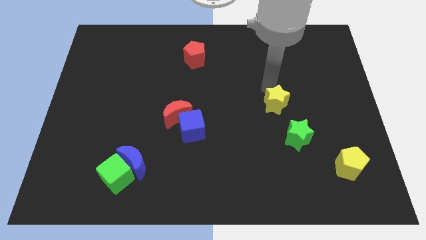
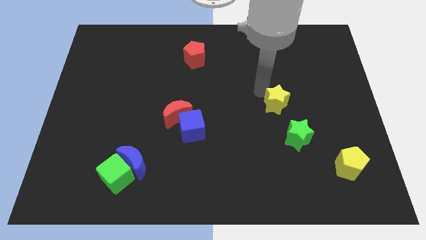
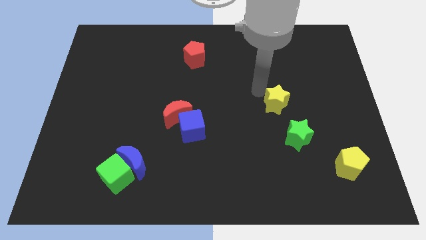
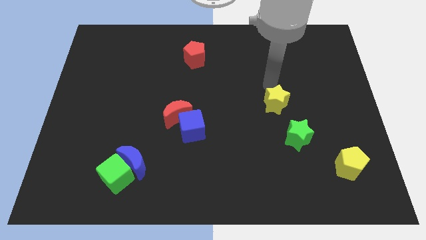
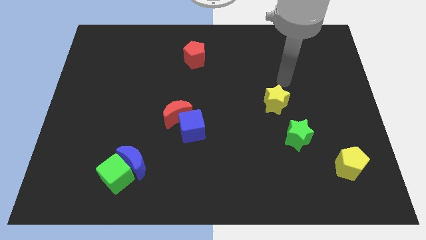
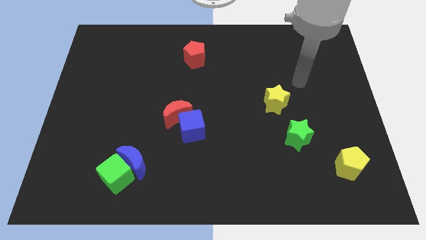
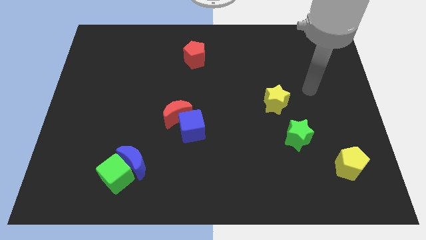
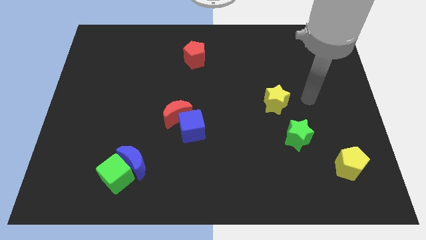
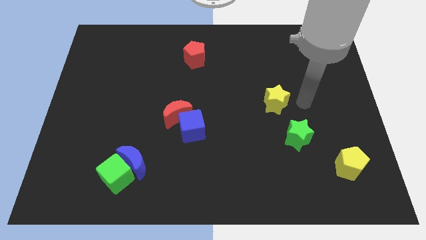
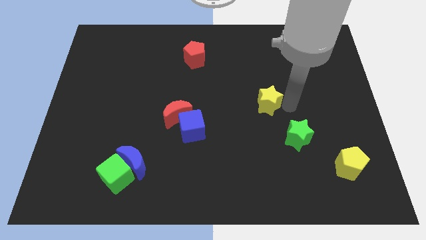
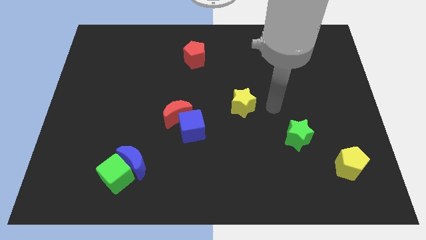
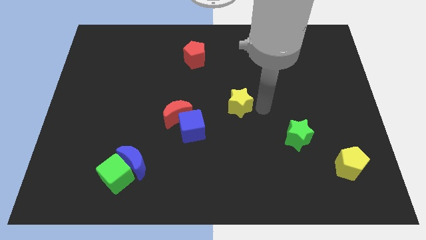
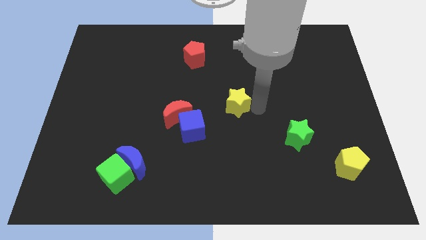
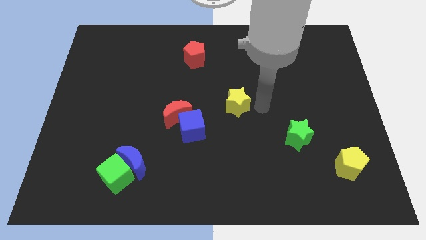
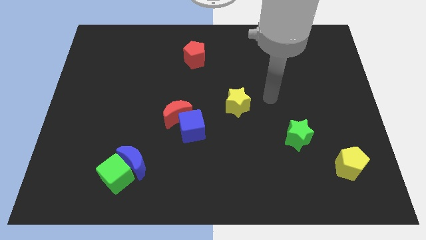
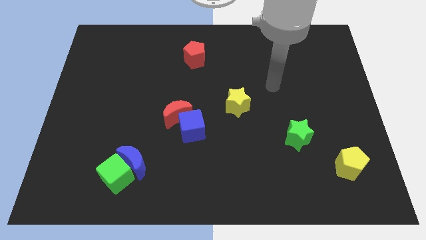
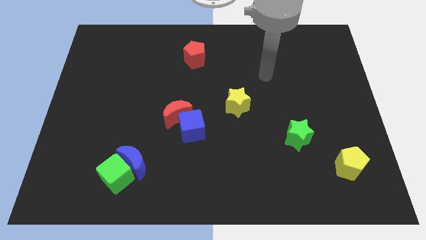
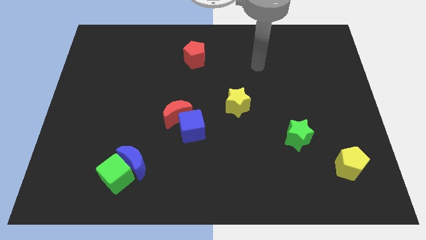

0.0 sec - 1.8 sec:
move the yellow moon slightly to the center of the board

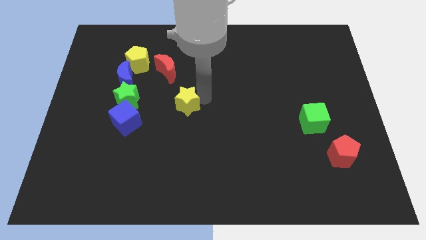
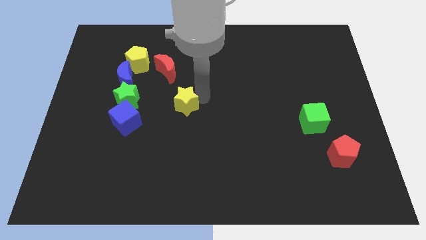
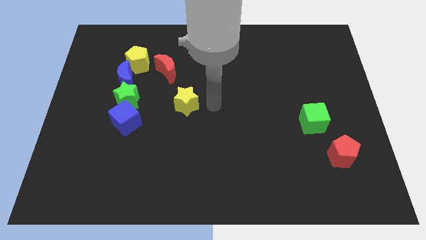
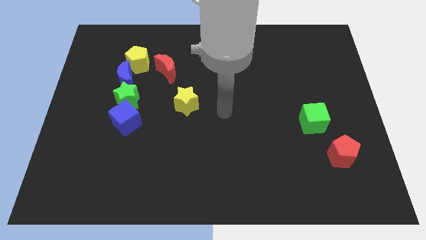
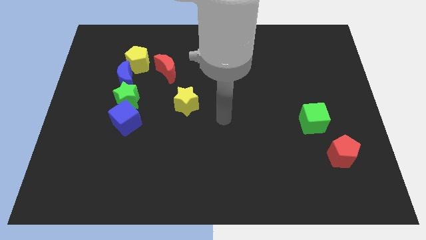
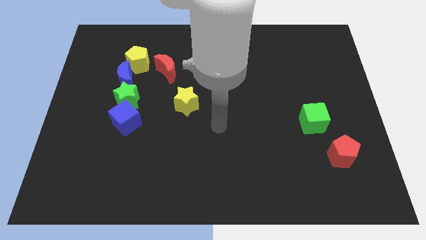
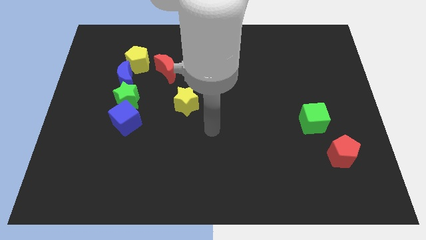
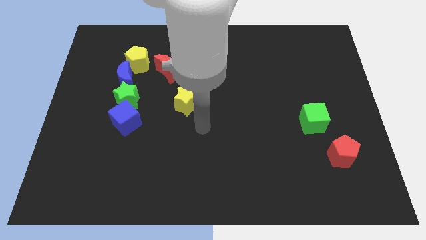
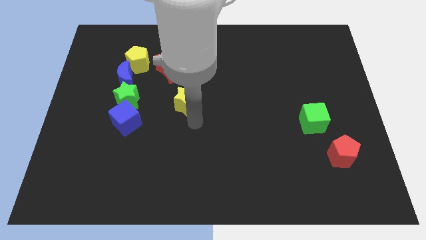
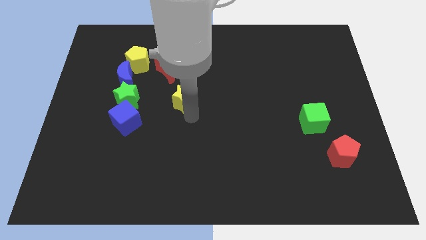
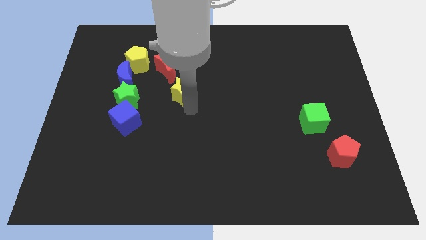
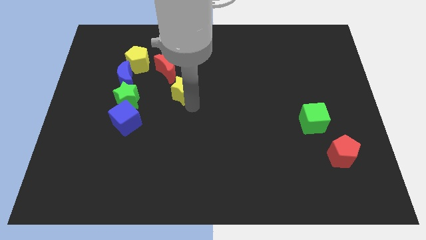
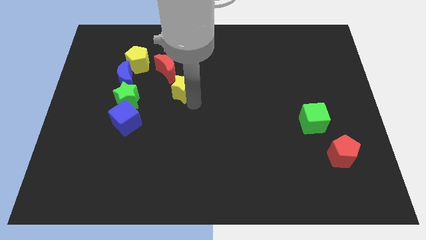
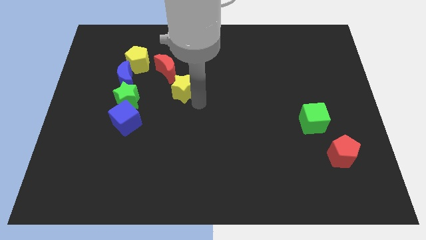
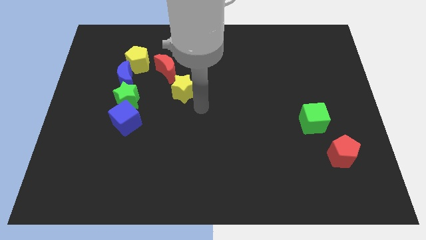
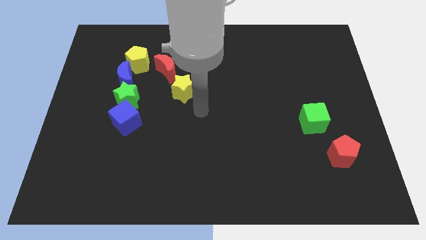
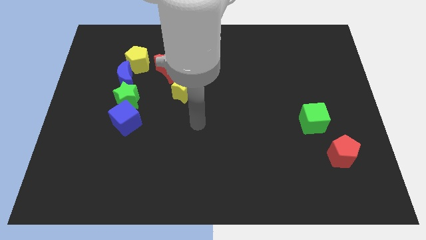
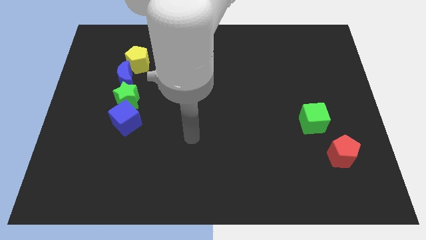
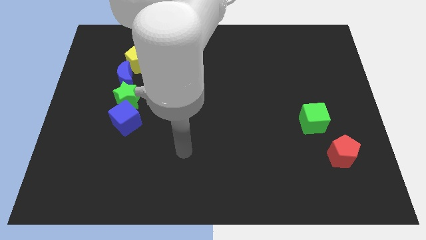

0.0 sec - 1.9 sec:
place the yellow star below the red crescent

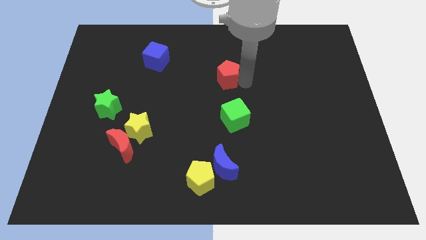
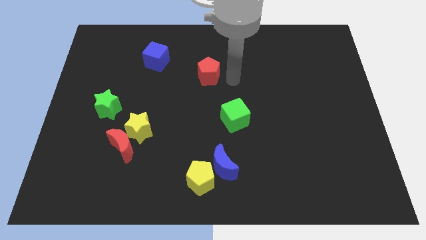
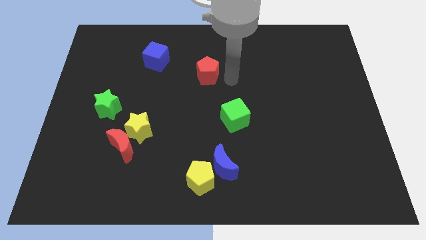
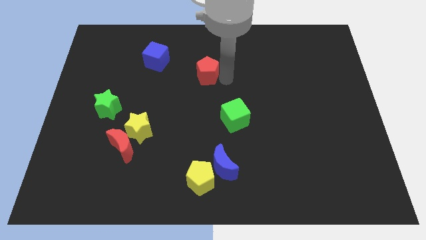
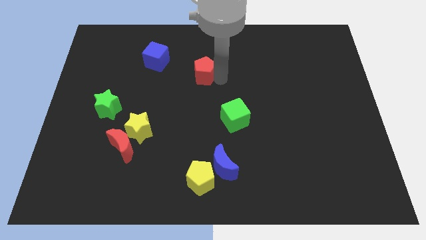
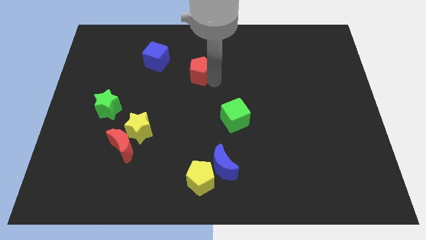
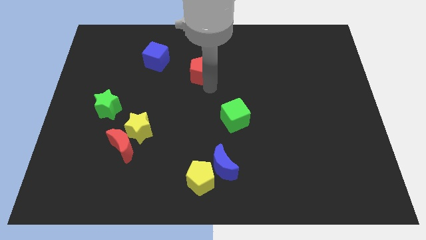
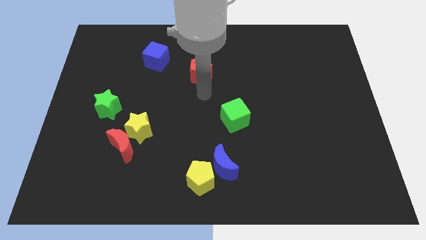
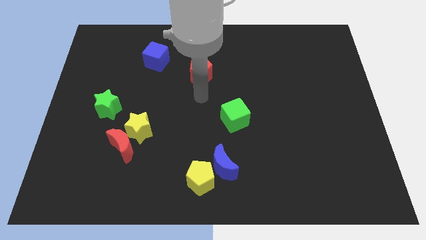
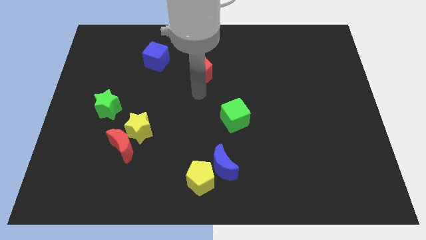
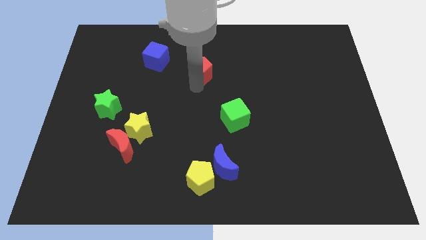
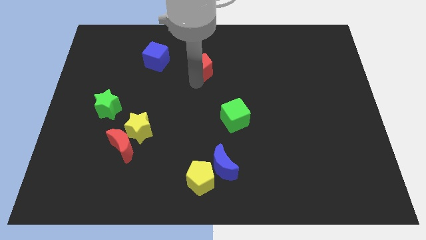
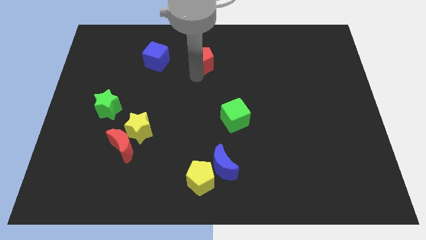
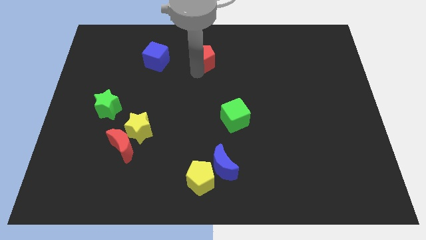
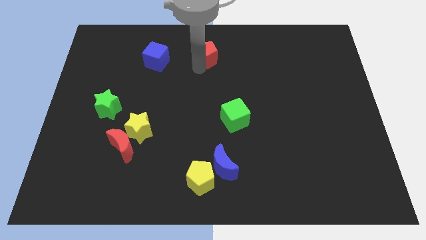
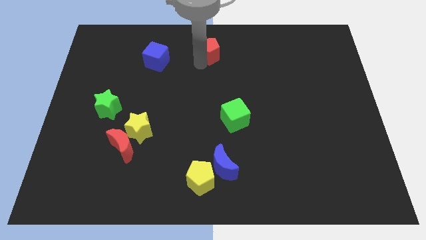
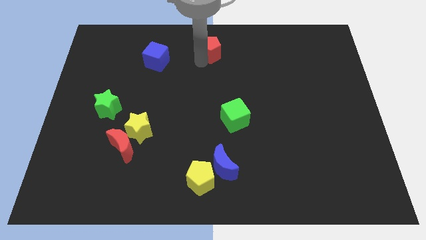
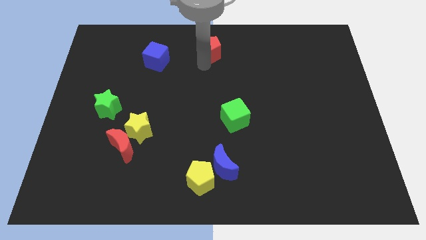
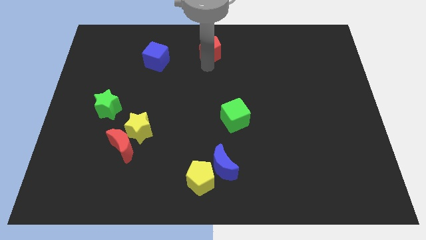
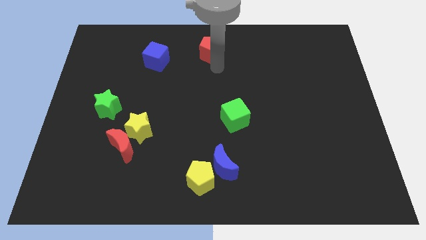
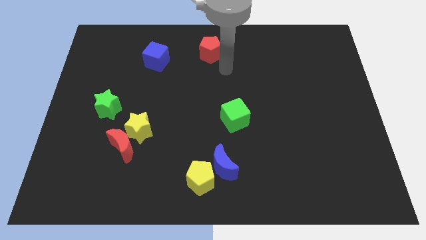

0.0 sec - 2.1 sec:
slide red pentagon to the right of blue cube

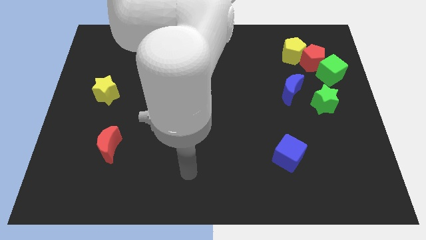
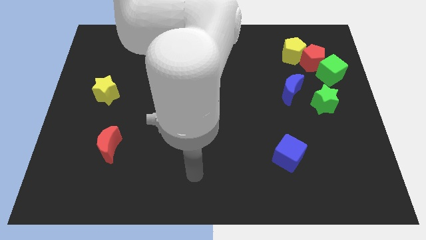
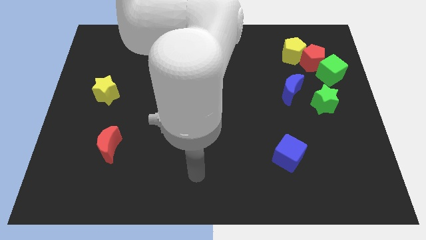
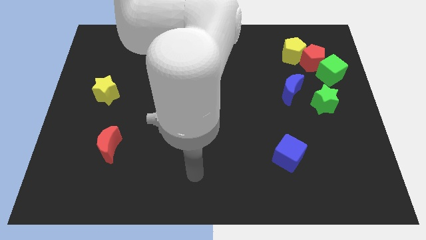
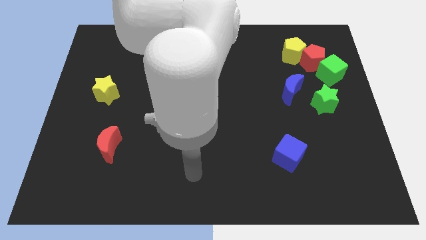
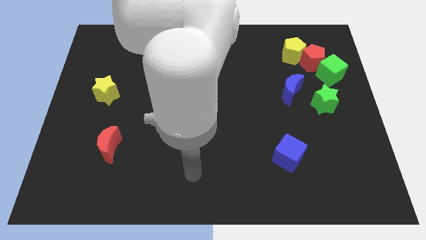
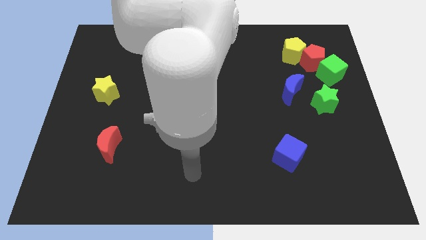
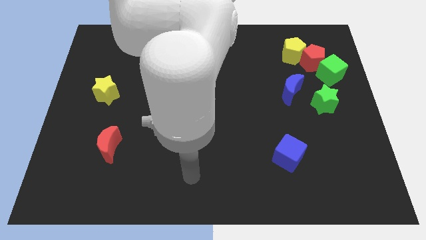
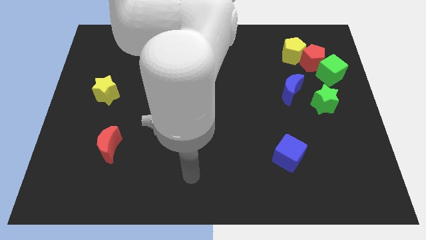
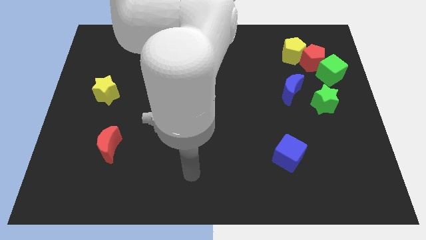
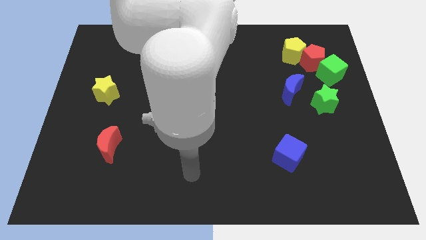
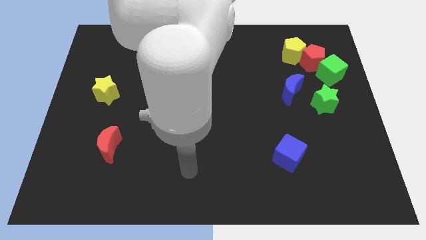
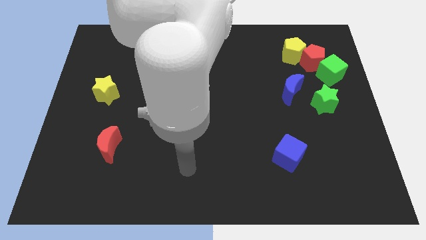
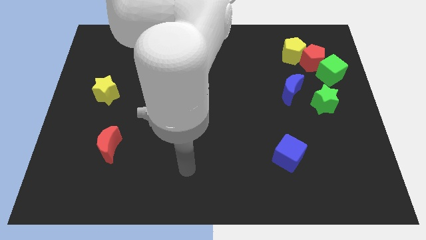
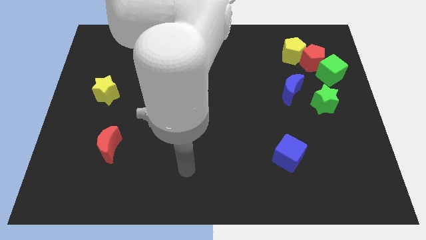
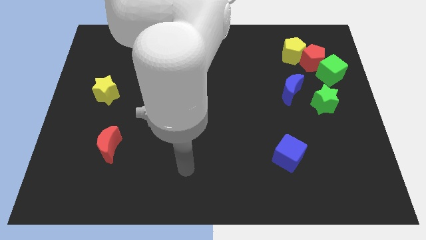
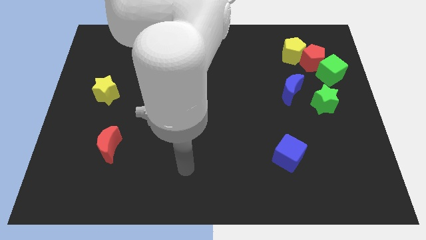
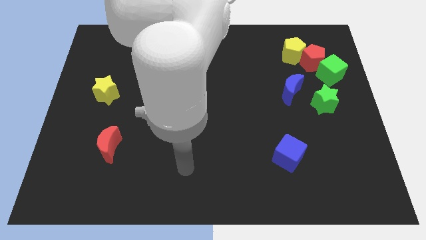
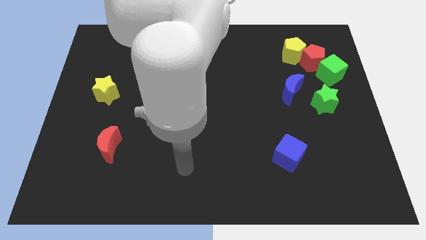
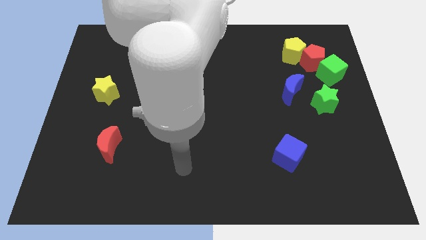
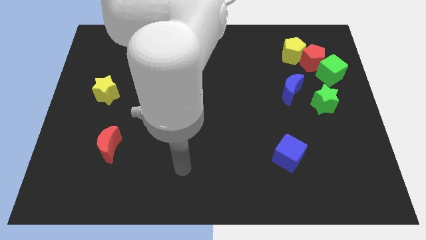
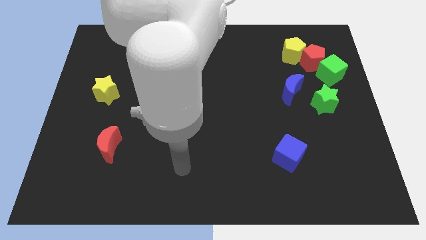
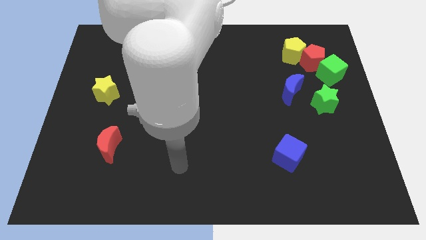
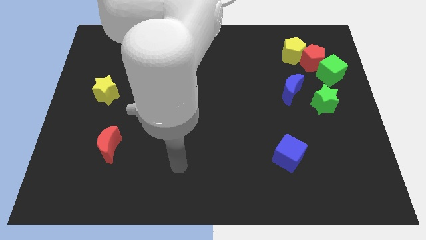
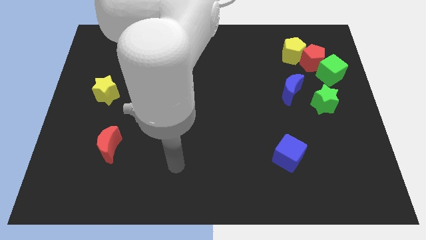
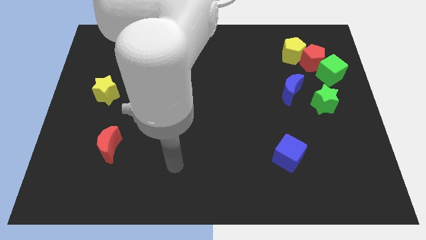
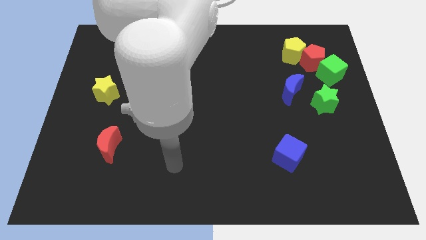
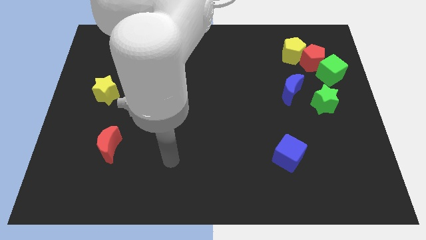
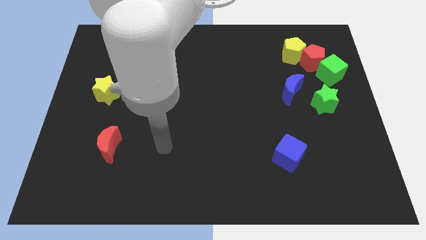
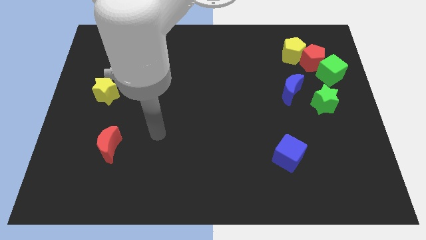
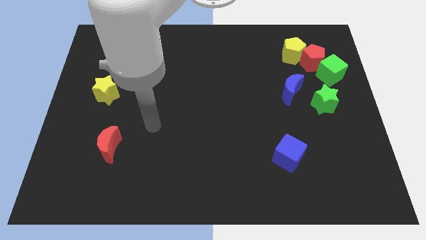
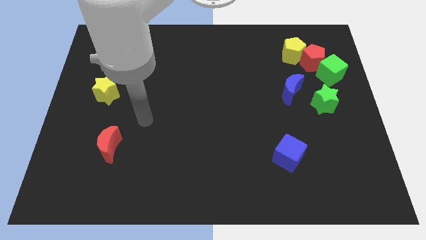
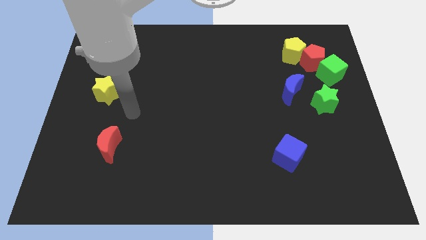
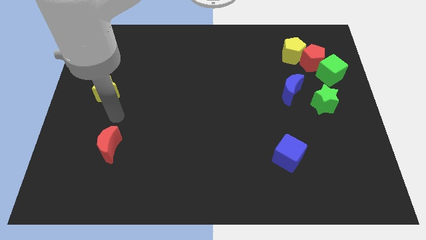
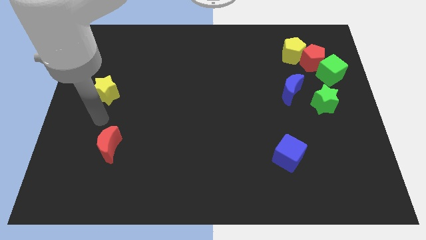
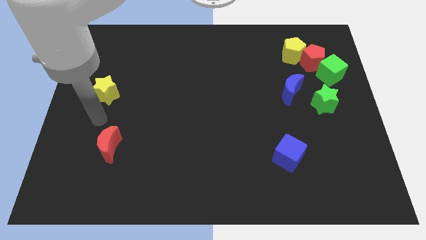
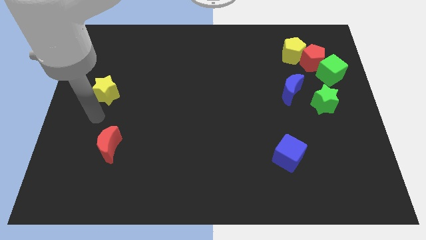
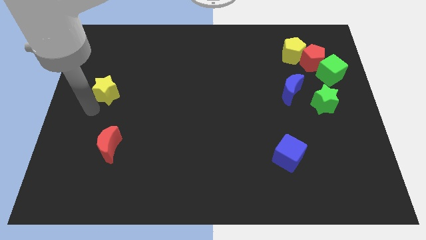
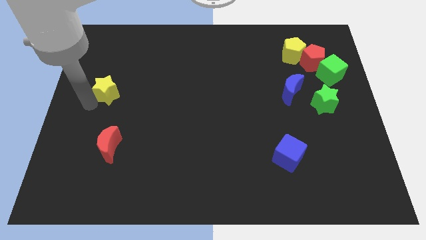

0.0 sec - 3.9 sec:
move your hand close to the yellow star
